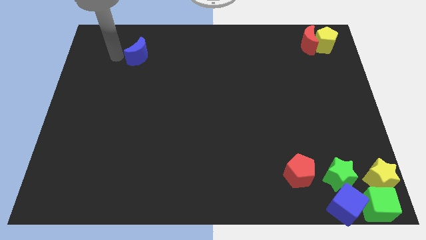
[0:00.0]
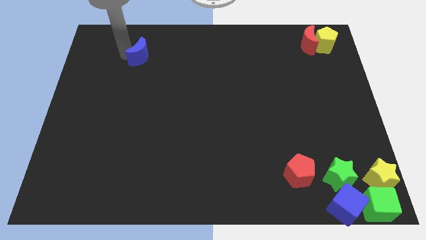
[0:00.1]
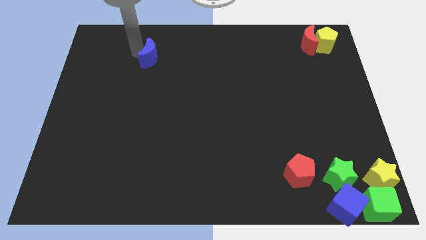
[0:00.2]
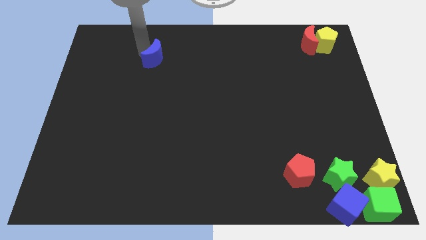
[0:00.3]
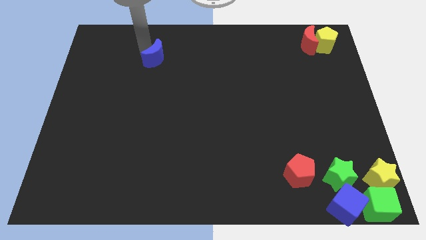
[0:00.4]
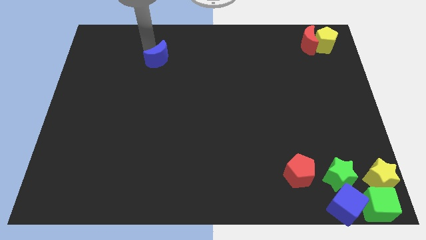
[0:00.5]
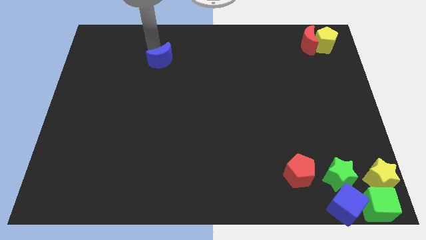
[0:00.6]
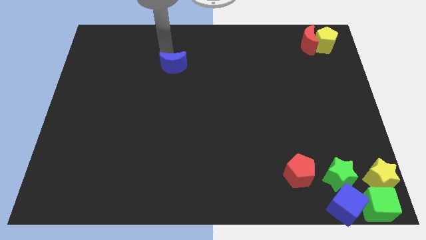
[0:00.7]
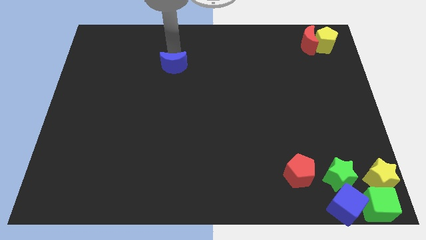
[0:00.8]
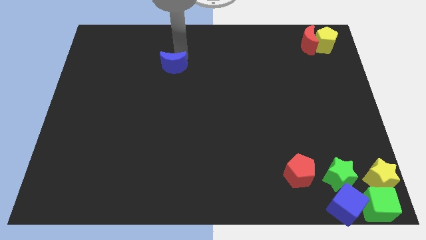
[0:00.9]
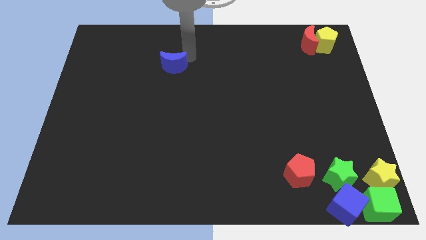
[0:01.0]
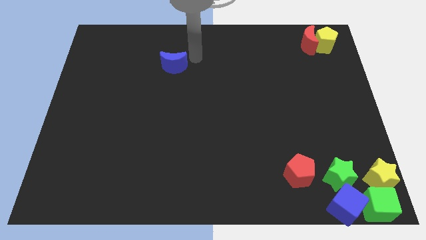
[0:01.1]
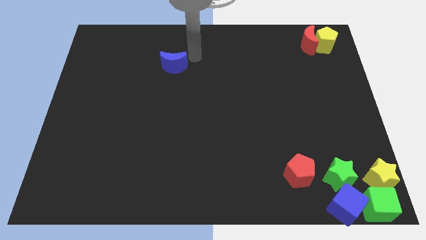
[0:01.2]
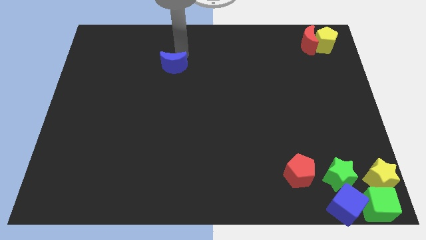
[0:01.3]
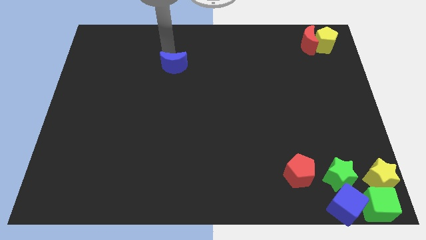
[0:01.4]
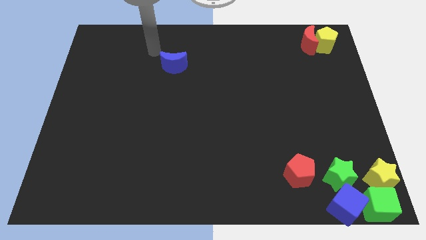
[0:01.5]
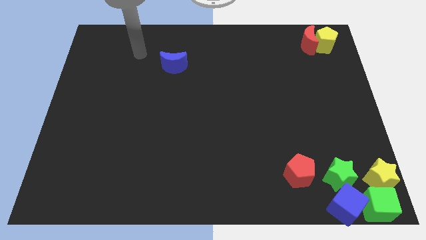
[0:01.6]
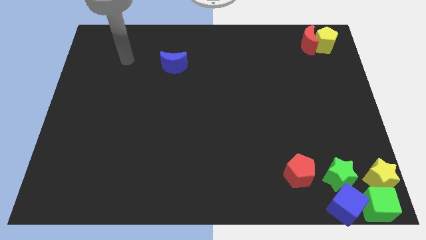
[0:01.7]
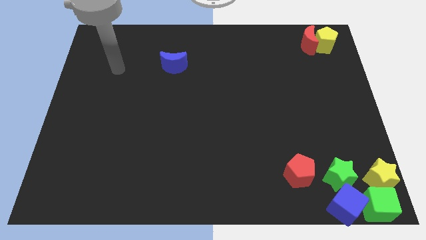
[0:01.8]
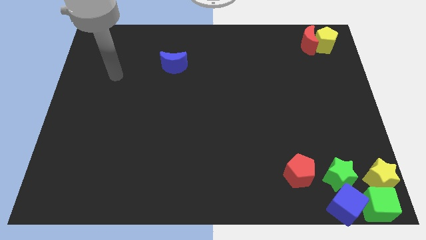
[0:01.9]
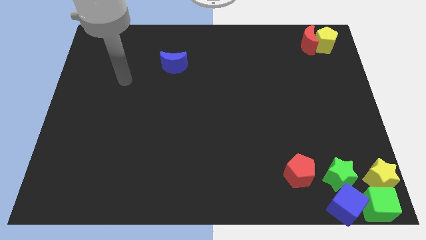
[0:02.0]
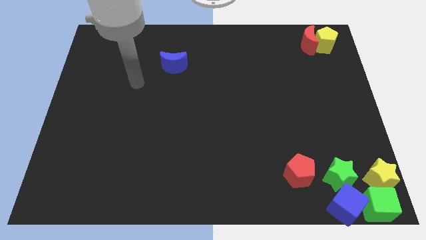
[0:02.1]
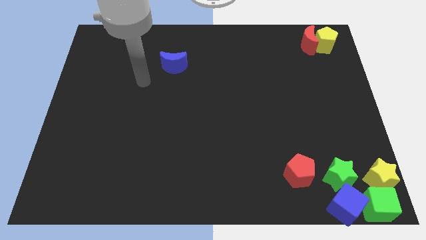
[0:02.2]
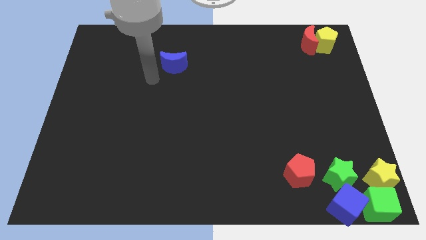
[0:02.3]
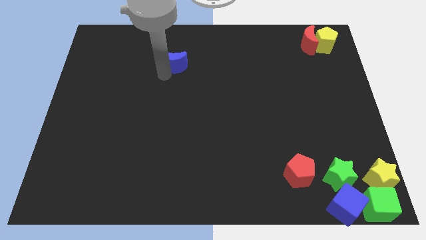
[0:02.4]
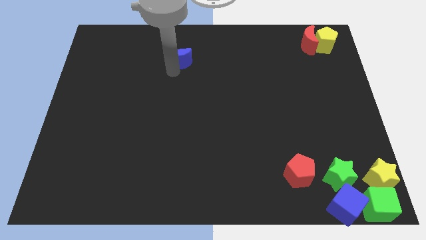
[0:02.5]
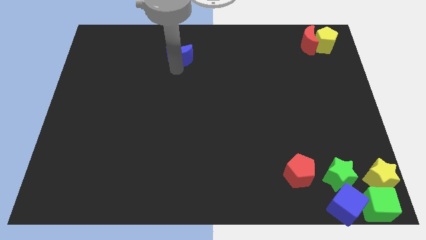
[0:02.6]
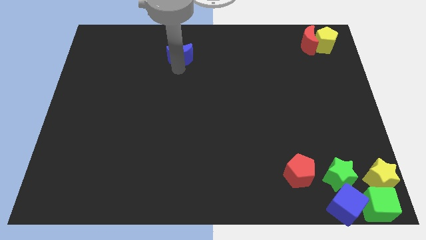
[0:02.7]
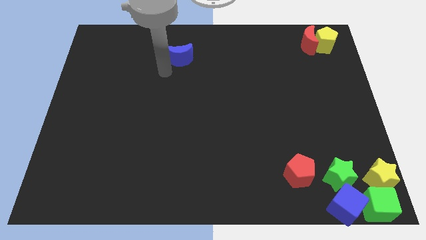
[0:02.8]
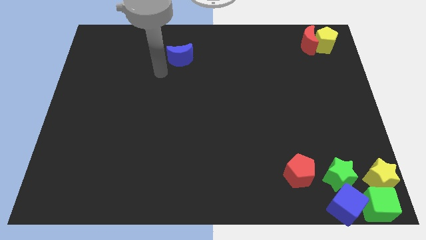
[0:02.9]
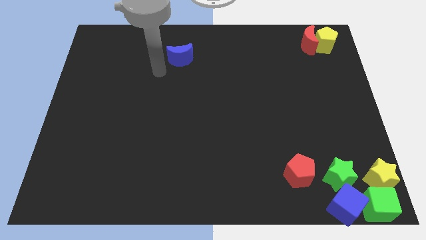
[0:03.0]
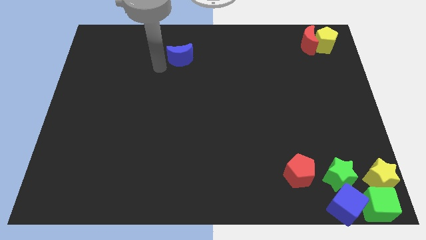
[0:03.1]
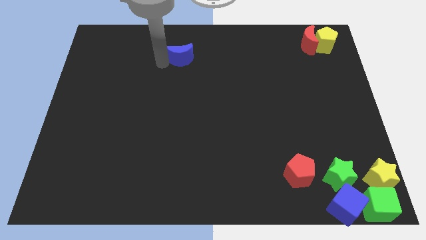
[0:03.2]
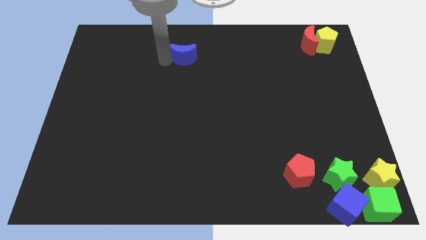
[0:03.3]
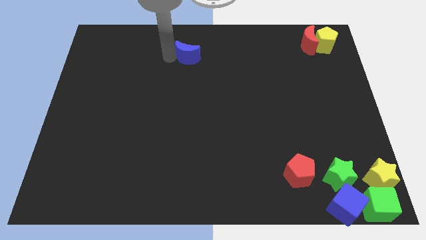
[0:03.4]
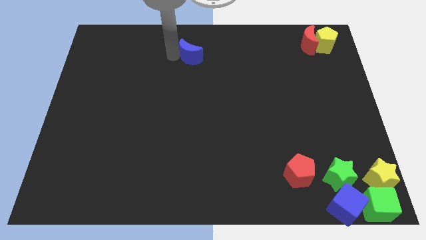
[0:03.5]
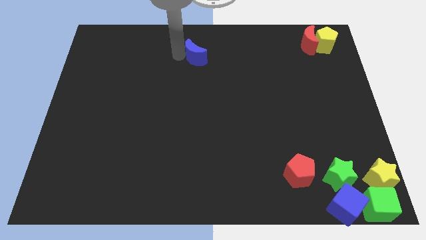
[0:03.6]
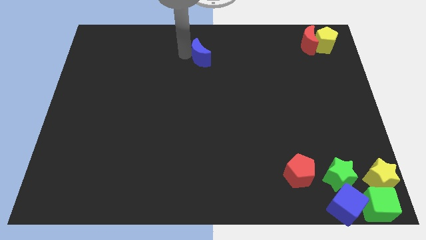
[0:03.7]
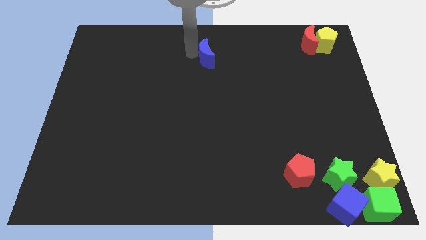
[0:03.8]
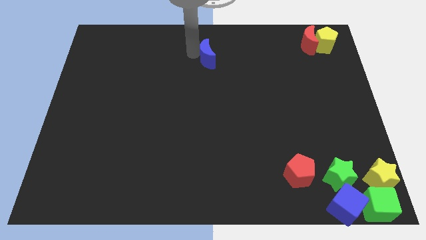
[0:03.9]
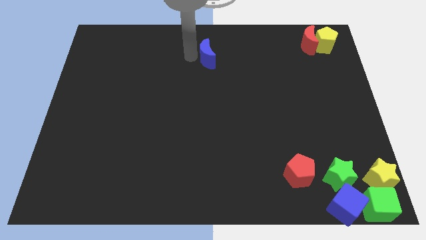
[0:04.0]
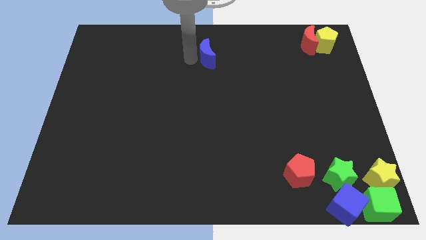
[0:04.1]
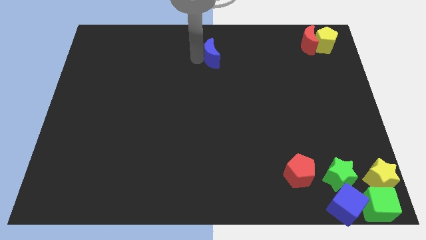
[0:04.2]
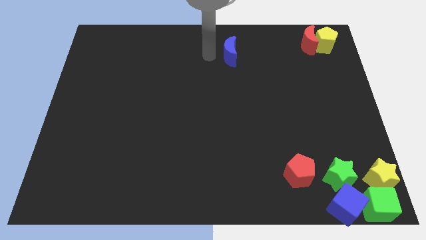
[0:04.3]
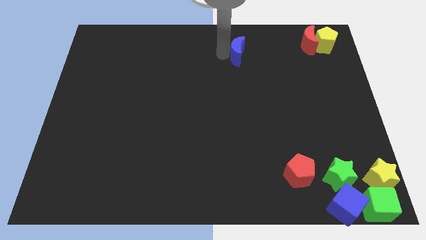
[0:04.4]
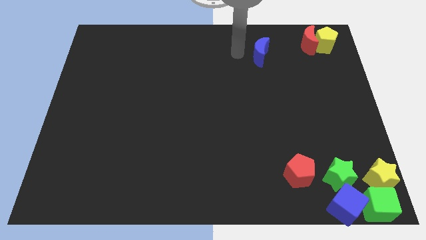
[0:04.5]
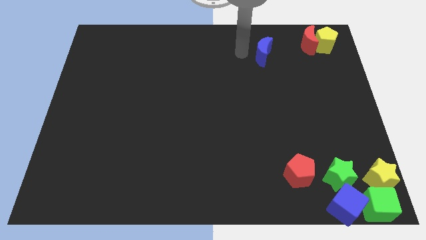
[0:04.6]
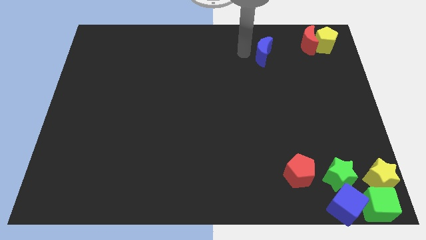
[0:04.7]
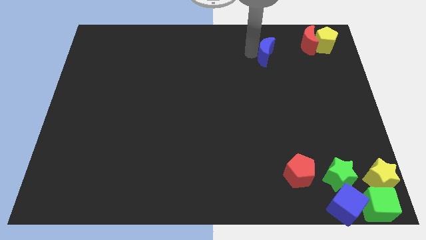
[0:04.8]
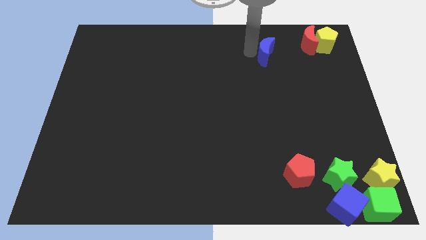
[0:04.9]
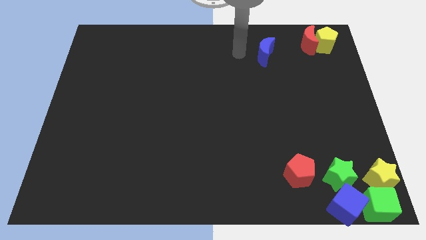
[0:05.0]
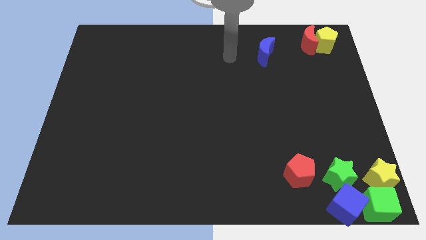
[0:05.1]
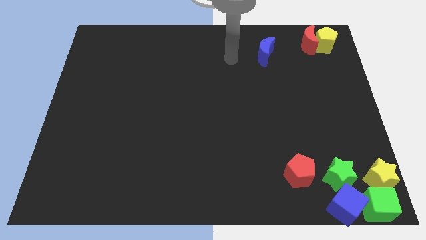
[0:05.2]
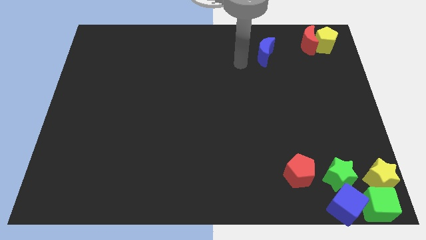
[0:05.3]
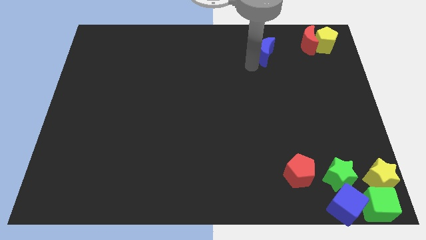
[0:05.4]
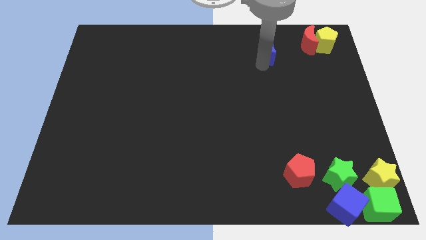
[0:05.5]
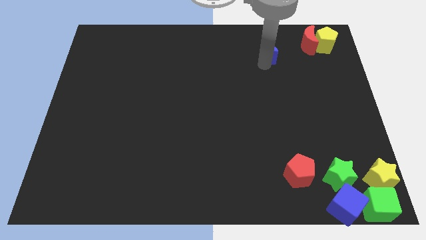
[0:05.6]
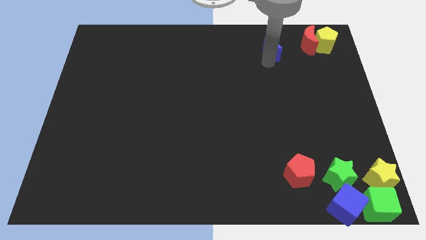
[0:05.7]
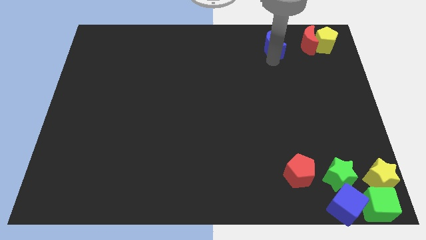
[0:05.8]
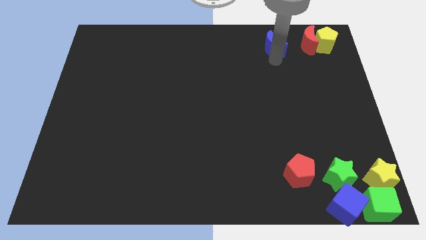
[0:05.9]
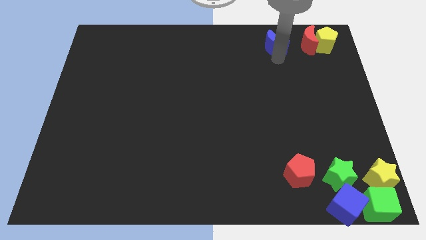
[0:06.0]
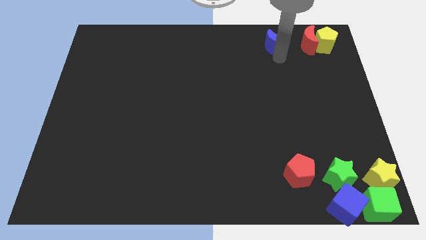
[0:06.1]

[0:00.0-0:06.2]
drag the blue crescent towards the left side of the red moon

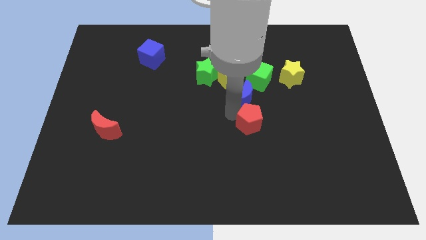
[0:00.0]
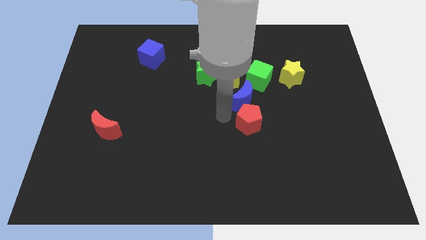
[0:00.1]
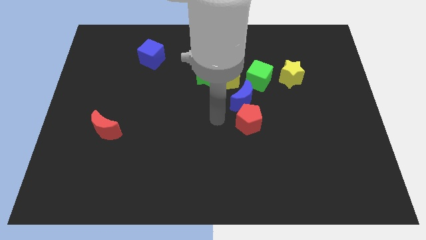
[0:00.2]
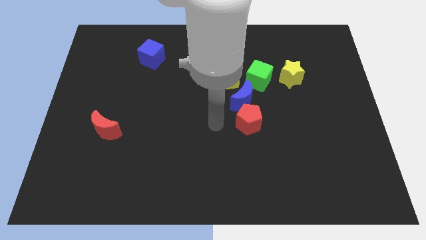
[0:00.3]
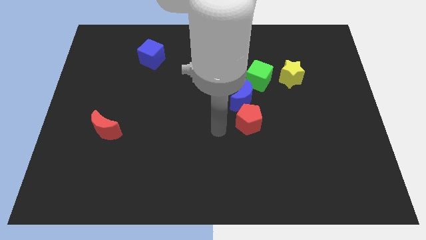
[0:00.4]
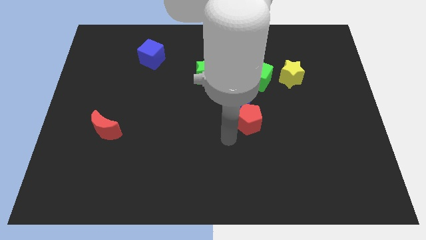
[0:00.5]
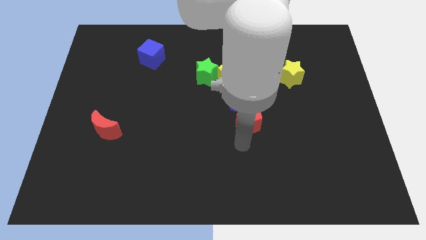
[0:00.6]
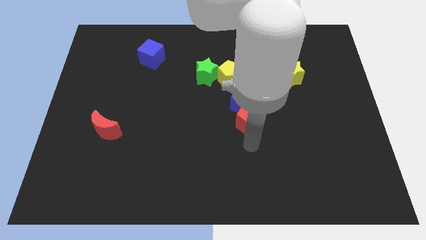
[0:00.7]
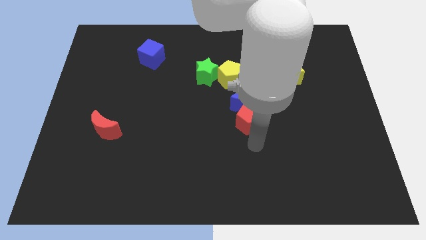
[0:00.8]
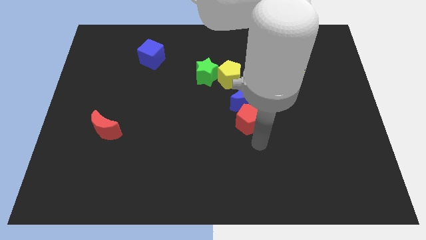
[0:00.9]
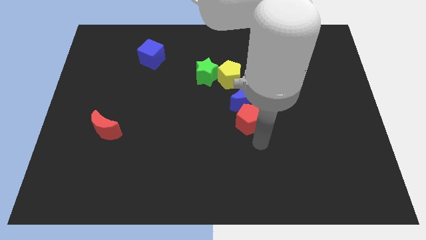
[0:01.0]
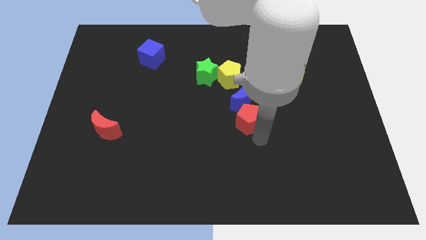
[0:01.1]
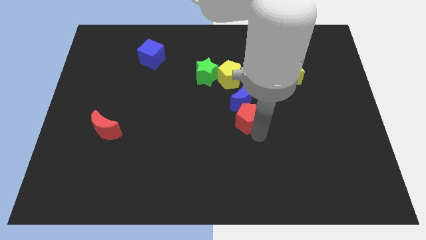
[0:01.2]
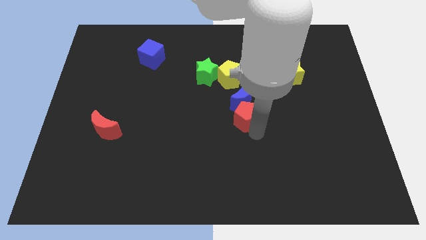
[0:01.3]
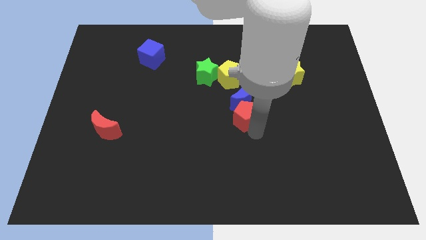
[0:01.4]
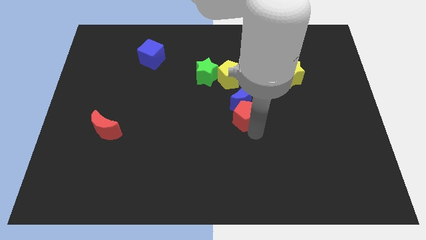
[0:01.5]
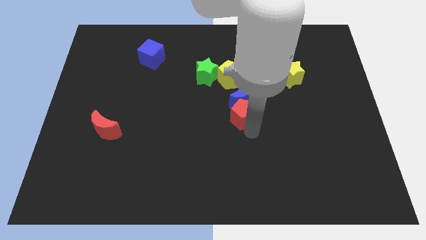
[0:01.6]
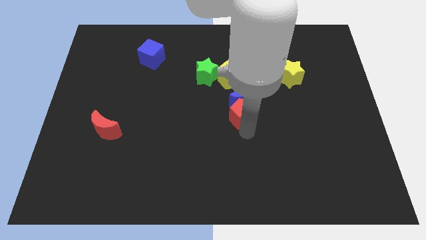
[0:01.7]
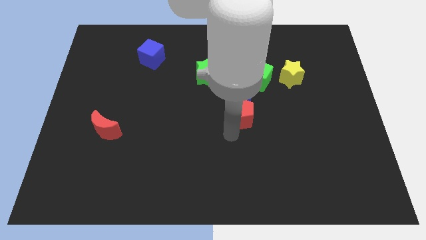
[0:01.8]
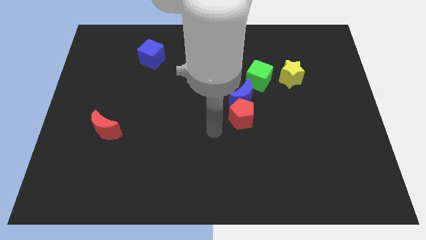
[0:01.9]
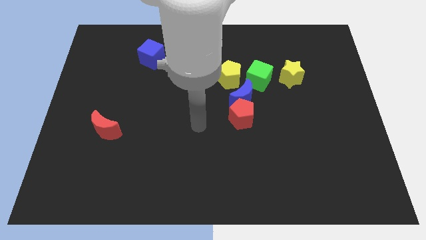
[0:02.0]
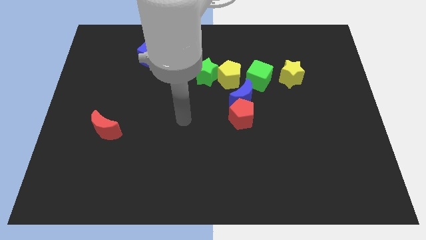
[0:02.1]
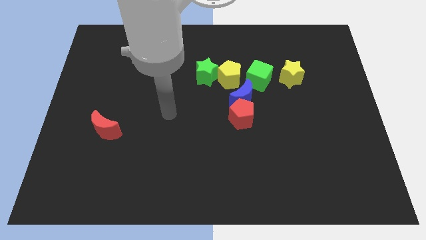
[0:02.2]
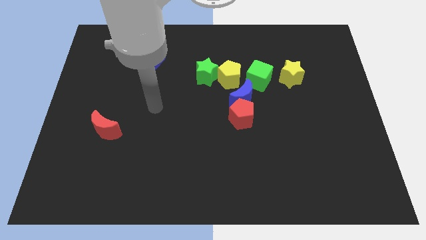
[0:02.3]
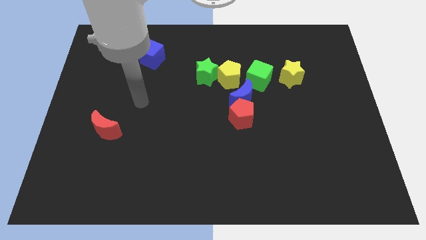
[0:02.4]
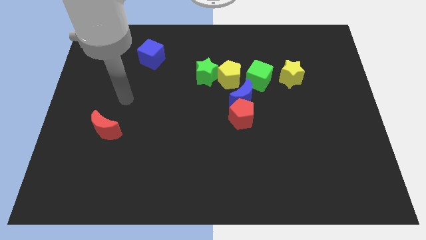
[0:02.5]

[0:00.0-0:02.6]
push the red pentagon and blue moon towards the yellow pentagon

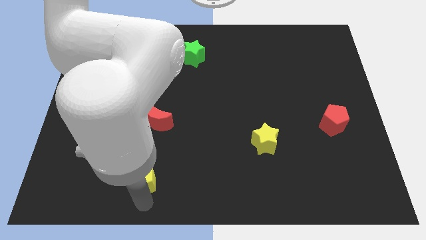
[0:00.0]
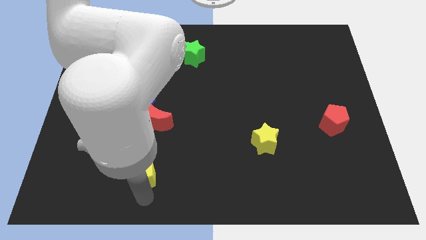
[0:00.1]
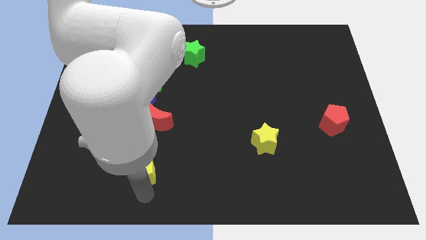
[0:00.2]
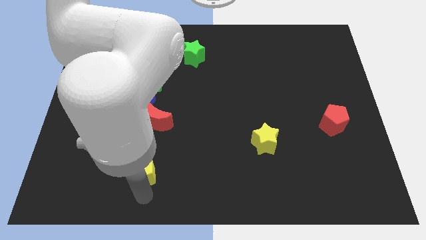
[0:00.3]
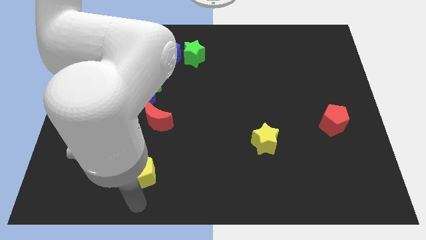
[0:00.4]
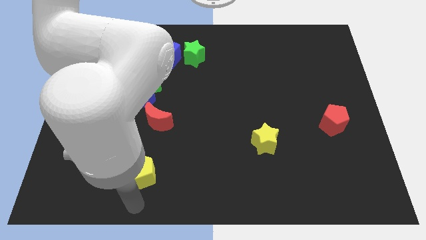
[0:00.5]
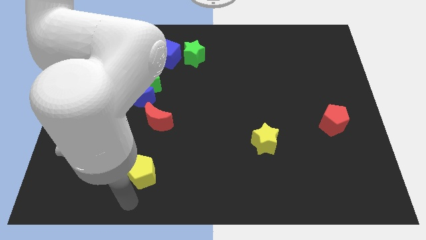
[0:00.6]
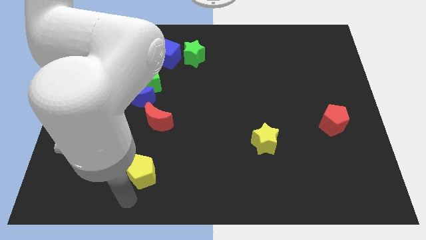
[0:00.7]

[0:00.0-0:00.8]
place the yellow pentagon left to the yellow star
